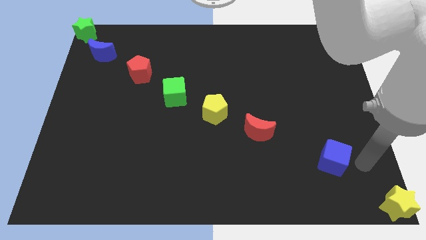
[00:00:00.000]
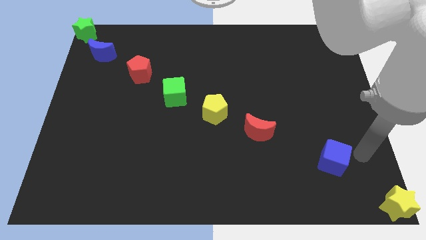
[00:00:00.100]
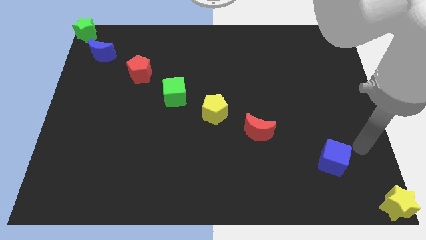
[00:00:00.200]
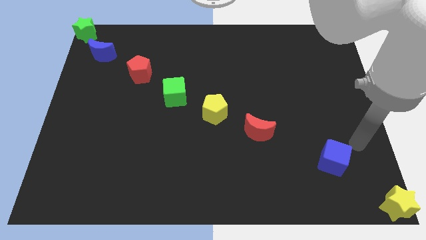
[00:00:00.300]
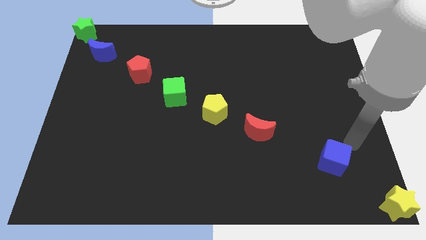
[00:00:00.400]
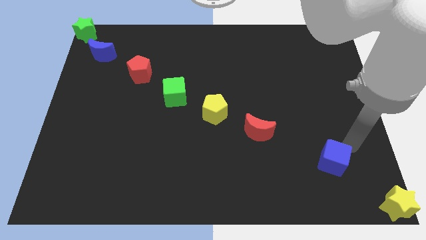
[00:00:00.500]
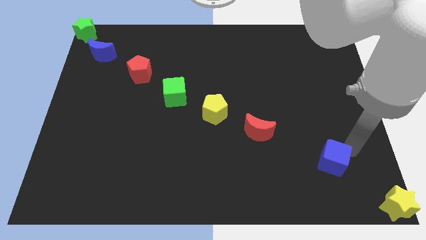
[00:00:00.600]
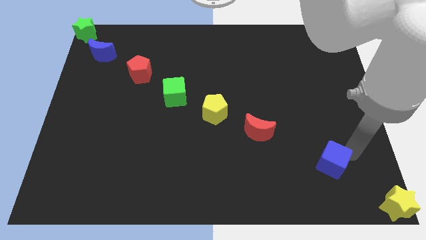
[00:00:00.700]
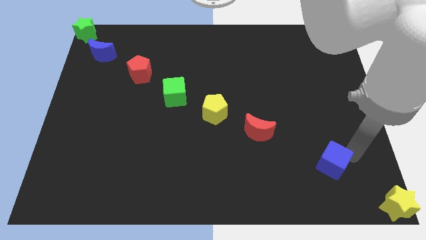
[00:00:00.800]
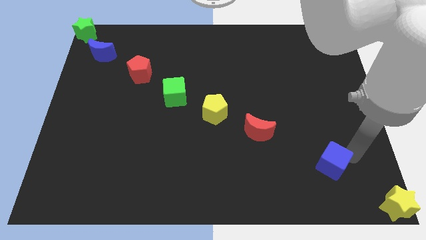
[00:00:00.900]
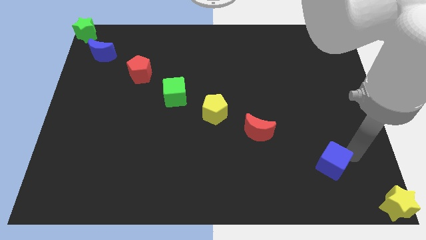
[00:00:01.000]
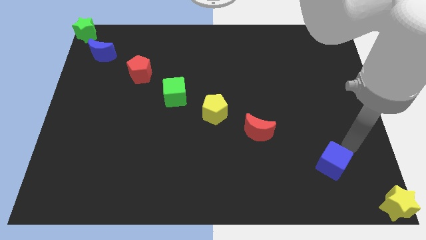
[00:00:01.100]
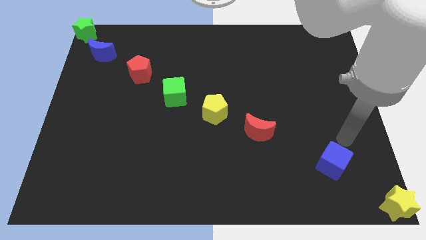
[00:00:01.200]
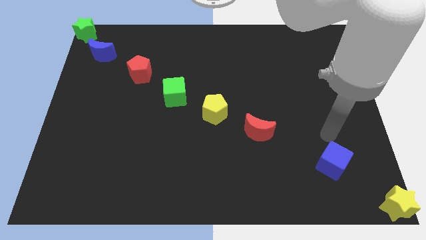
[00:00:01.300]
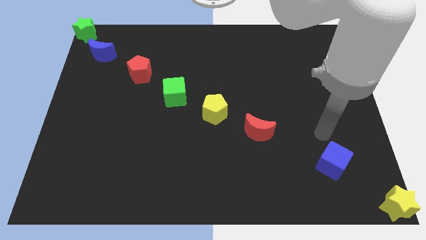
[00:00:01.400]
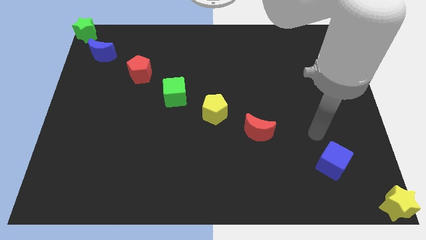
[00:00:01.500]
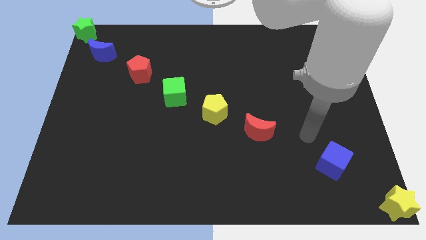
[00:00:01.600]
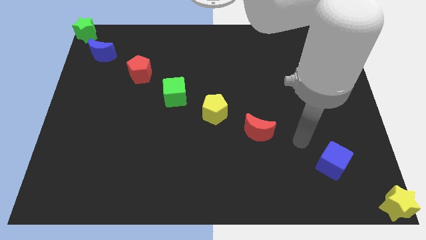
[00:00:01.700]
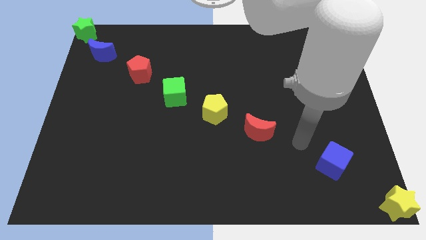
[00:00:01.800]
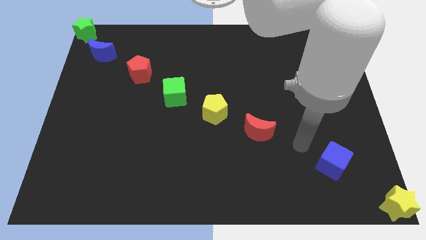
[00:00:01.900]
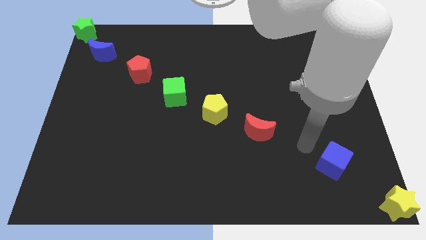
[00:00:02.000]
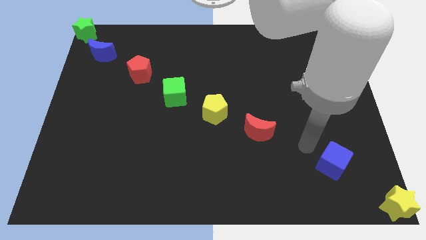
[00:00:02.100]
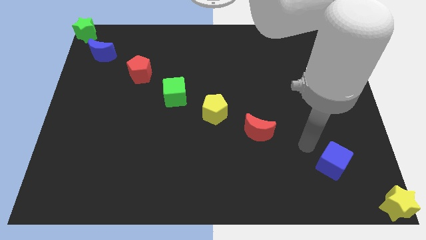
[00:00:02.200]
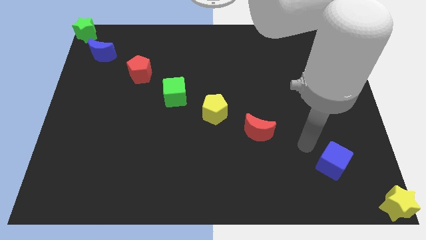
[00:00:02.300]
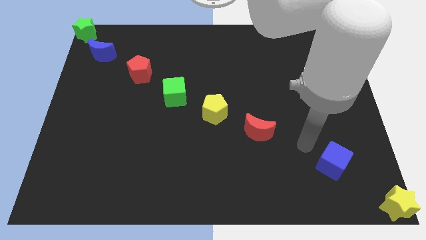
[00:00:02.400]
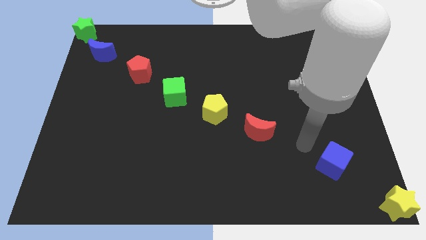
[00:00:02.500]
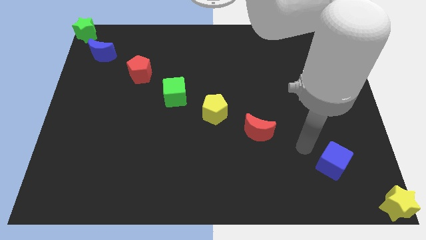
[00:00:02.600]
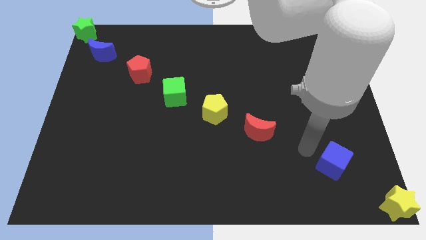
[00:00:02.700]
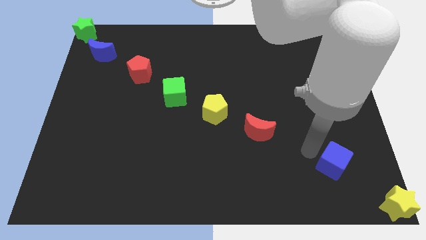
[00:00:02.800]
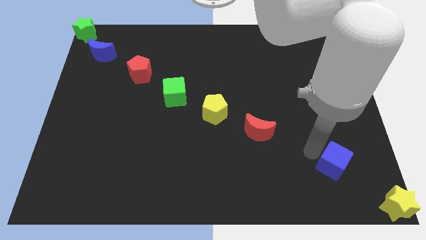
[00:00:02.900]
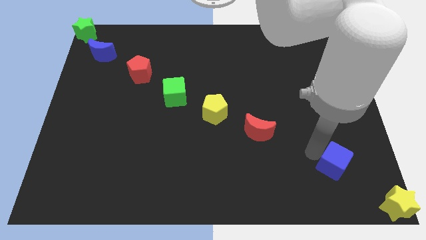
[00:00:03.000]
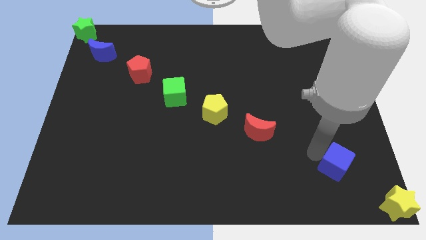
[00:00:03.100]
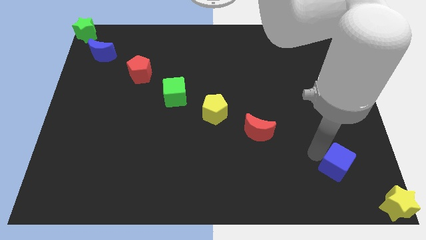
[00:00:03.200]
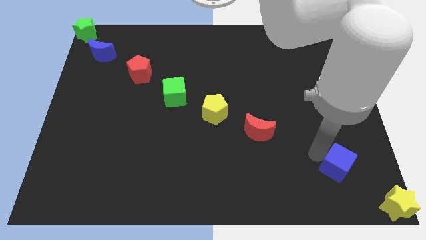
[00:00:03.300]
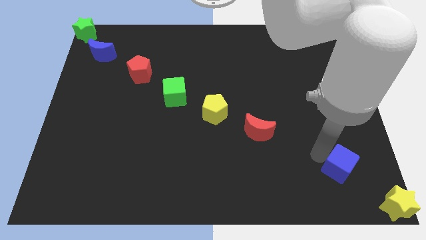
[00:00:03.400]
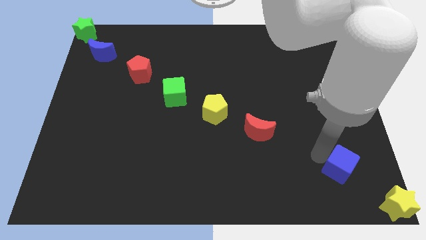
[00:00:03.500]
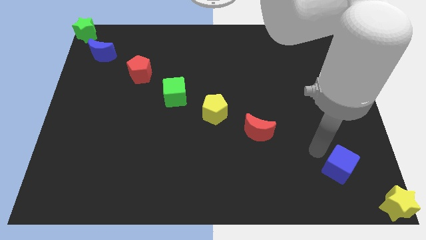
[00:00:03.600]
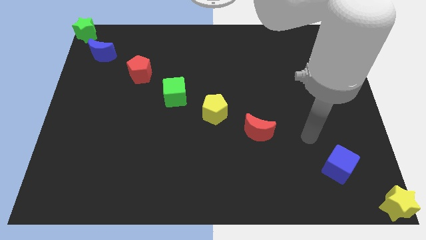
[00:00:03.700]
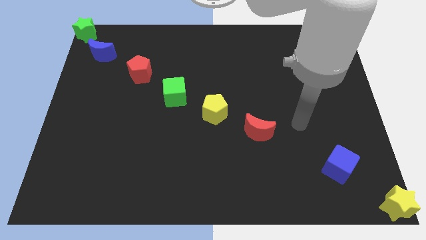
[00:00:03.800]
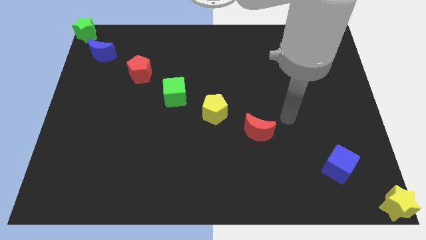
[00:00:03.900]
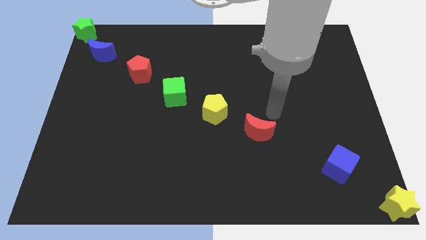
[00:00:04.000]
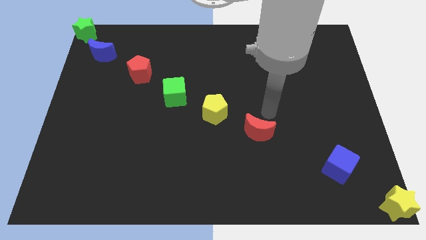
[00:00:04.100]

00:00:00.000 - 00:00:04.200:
push the blue cube to the bottom right of the board

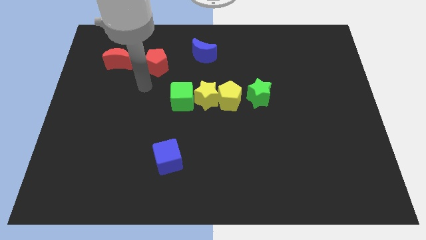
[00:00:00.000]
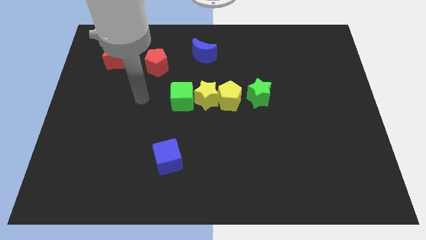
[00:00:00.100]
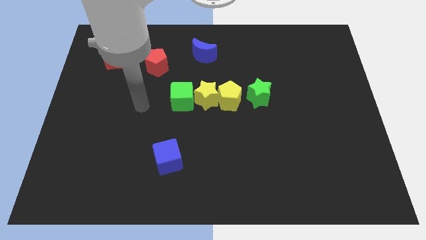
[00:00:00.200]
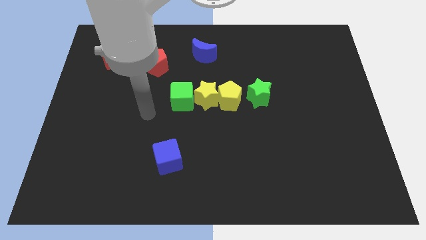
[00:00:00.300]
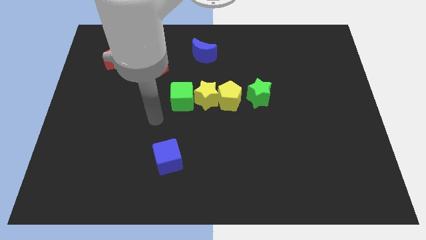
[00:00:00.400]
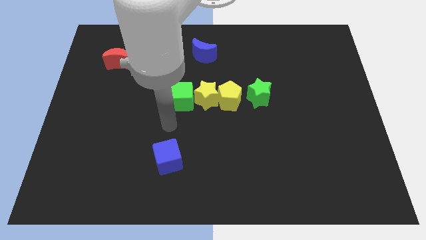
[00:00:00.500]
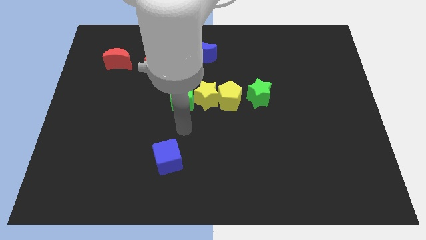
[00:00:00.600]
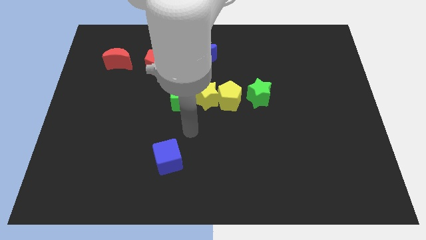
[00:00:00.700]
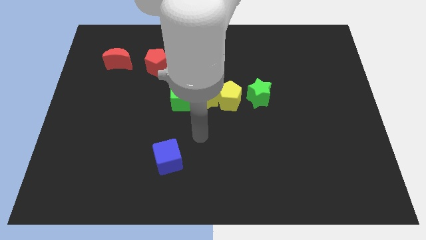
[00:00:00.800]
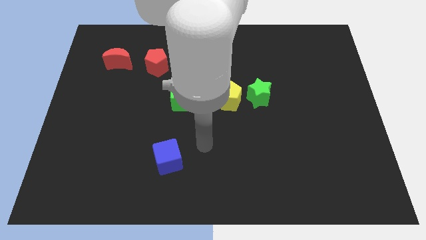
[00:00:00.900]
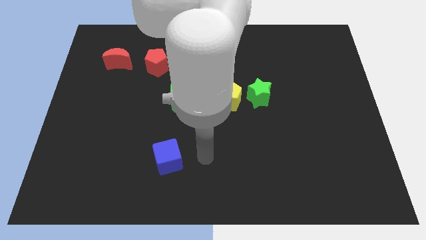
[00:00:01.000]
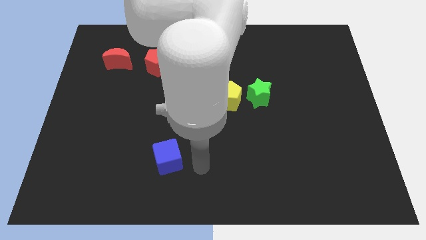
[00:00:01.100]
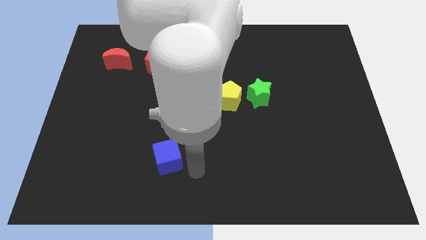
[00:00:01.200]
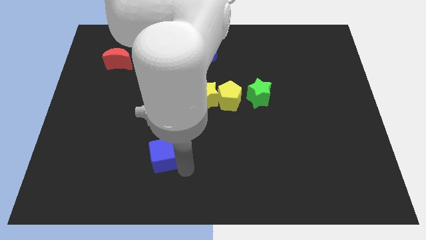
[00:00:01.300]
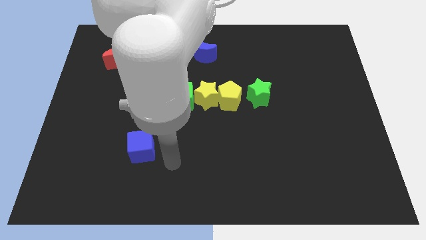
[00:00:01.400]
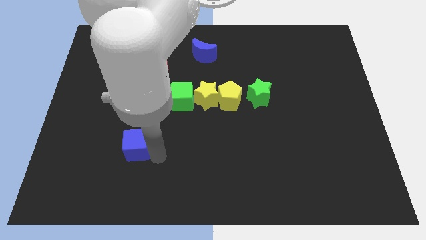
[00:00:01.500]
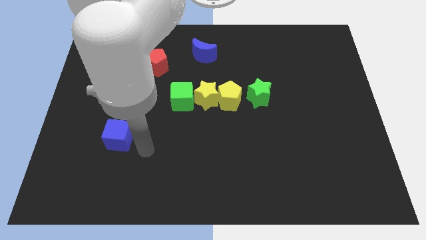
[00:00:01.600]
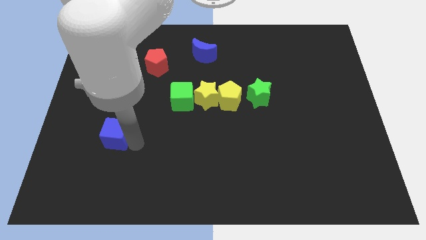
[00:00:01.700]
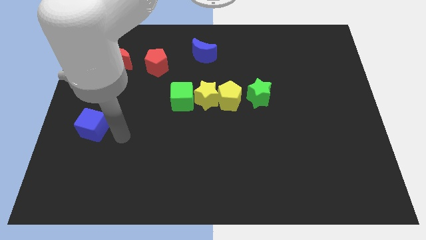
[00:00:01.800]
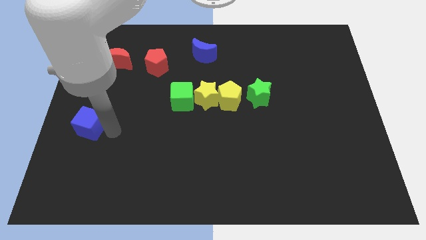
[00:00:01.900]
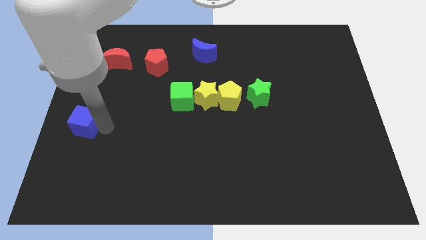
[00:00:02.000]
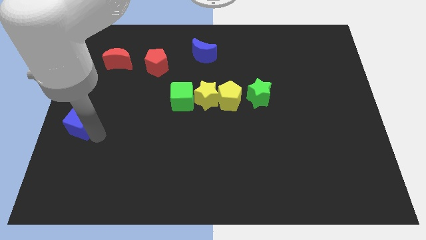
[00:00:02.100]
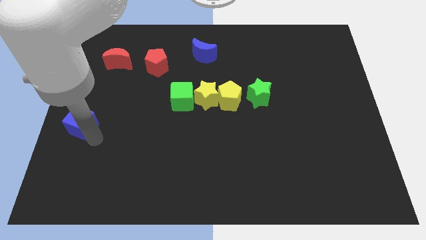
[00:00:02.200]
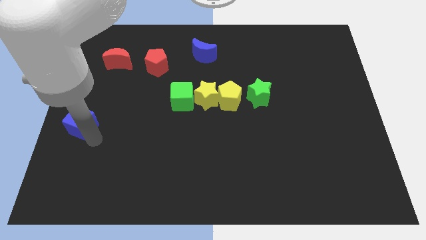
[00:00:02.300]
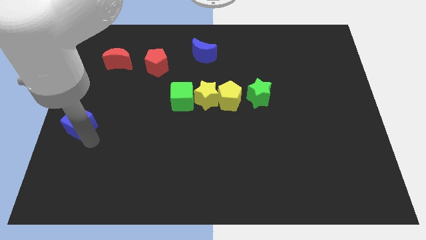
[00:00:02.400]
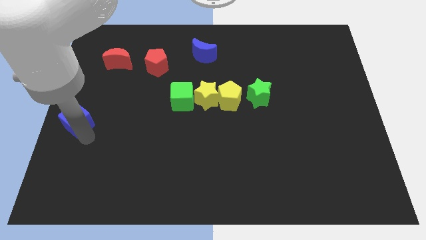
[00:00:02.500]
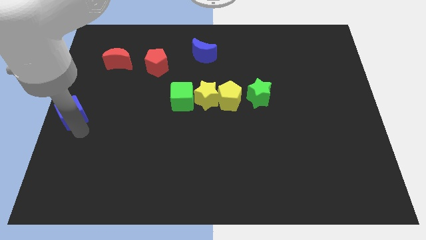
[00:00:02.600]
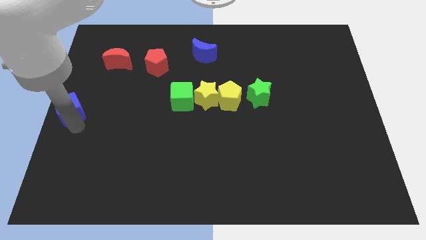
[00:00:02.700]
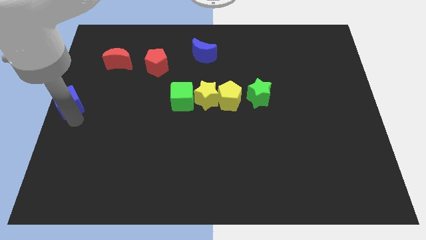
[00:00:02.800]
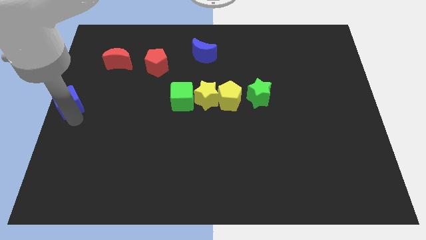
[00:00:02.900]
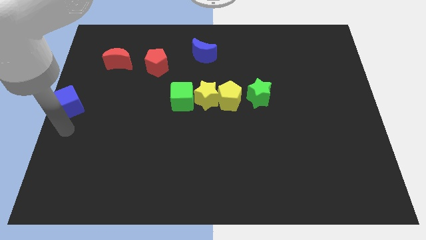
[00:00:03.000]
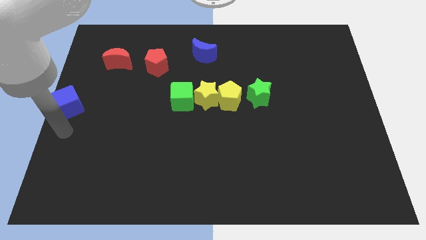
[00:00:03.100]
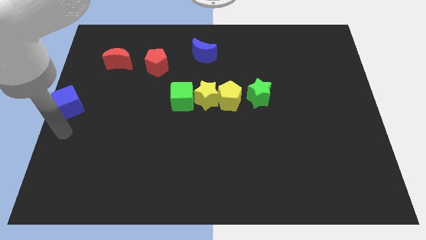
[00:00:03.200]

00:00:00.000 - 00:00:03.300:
place the blue cube at the center left corner

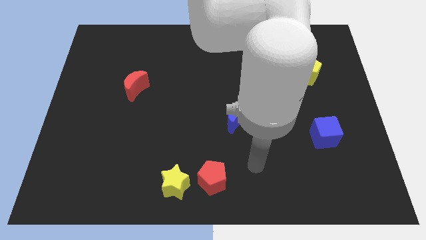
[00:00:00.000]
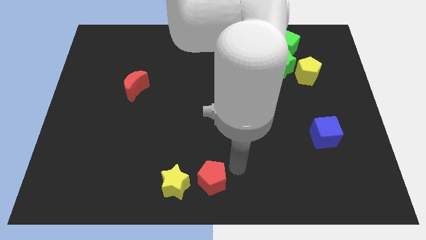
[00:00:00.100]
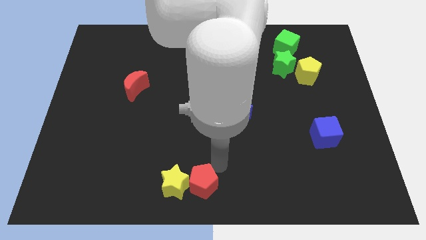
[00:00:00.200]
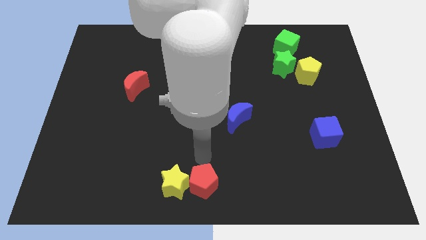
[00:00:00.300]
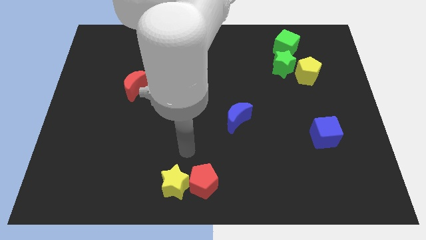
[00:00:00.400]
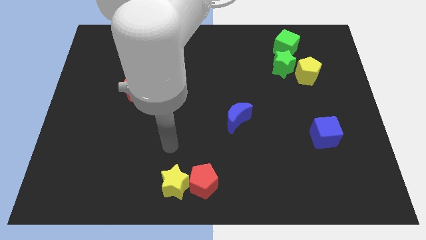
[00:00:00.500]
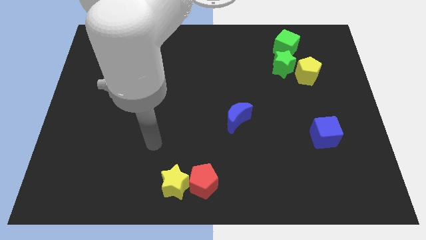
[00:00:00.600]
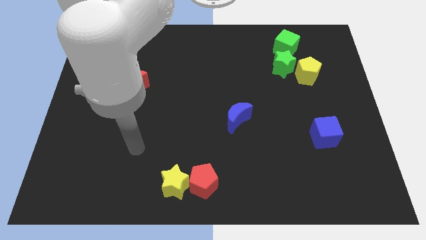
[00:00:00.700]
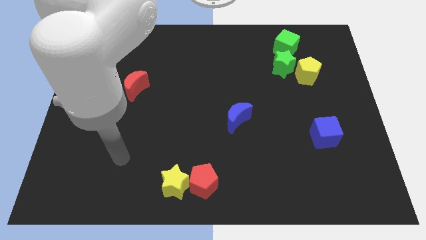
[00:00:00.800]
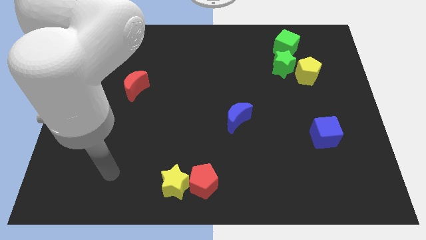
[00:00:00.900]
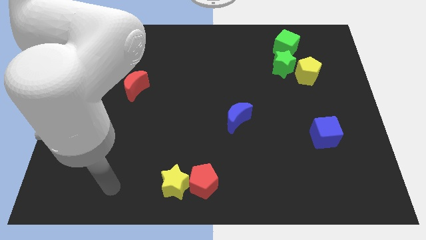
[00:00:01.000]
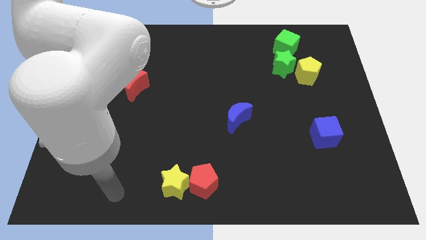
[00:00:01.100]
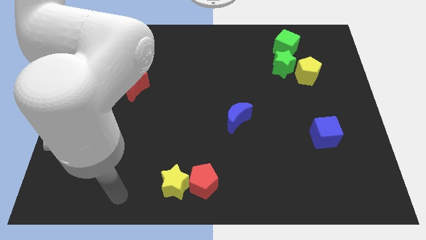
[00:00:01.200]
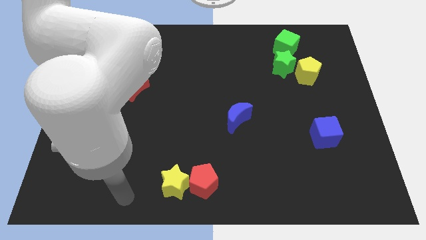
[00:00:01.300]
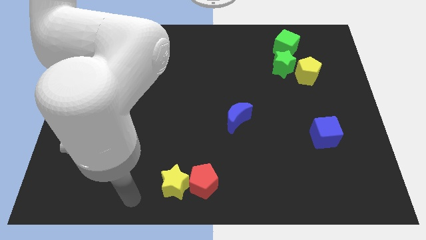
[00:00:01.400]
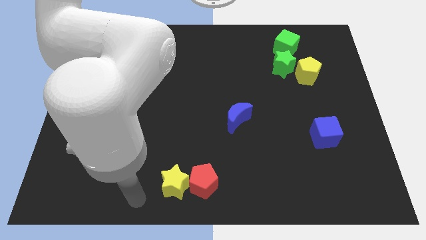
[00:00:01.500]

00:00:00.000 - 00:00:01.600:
push the red pentagon into the yellow star
